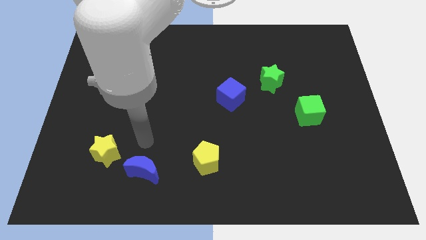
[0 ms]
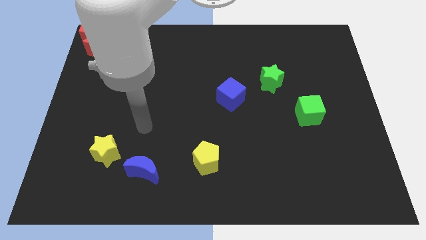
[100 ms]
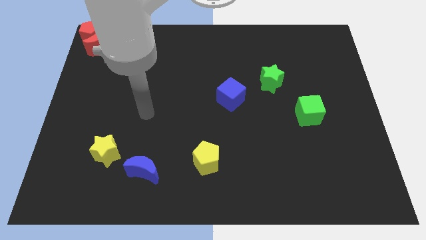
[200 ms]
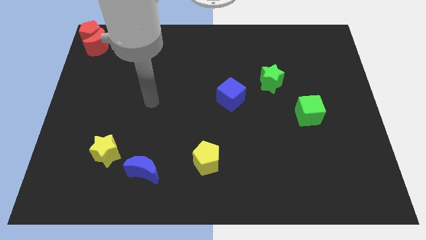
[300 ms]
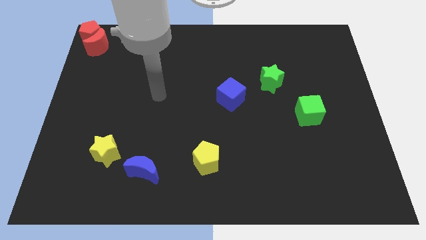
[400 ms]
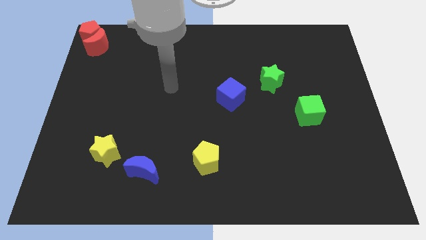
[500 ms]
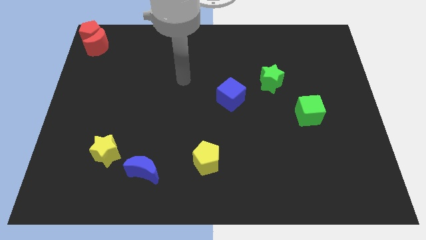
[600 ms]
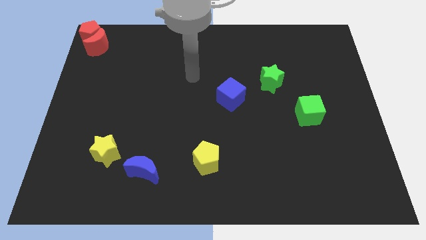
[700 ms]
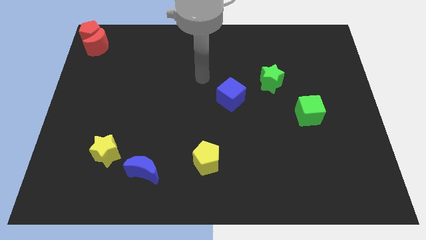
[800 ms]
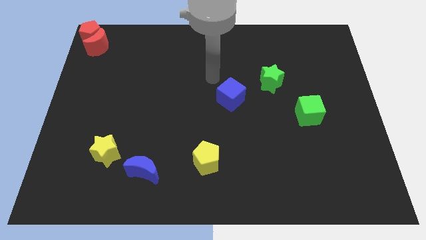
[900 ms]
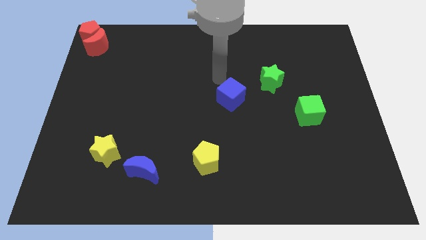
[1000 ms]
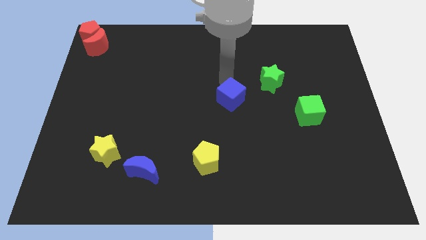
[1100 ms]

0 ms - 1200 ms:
move your arm to the top side of the blue cube

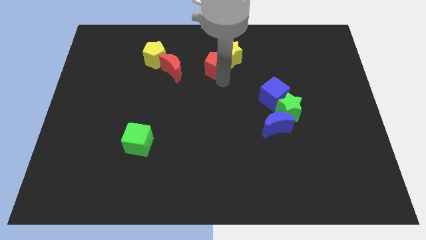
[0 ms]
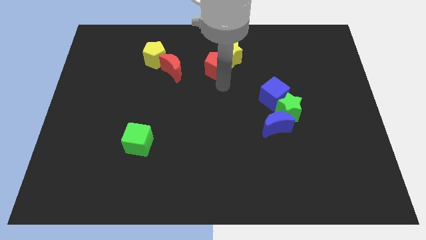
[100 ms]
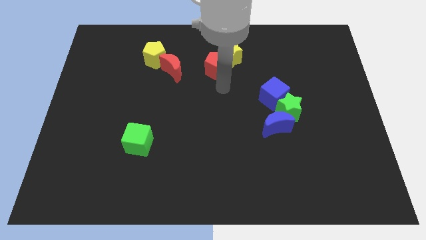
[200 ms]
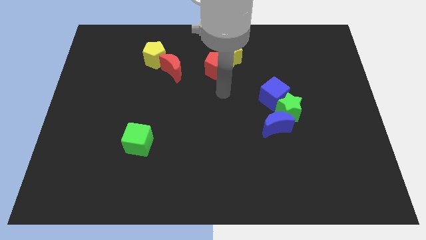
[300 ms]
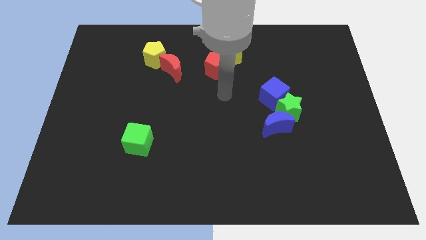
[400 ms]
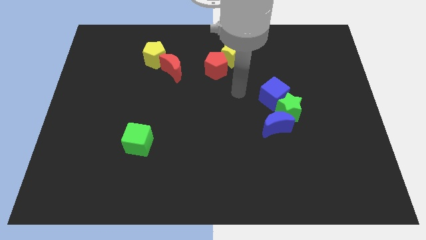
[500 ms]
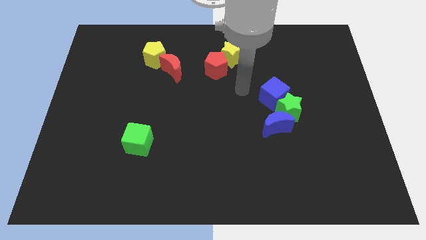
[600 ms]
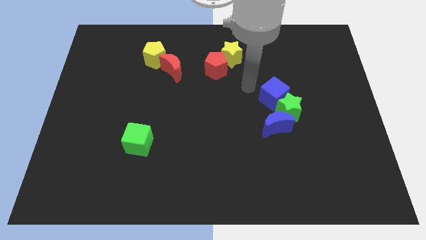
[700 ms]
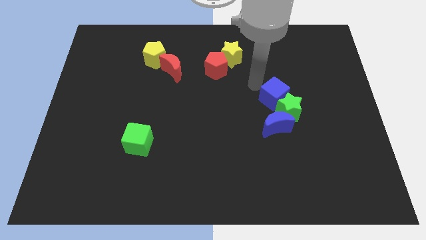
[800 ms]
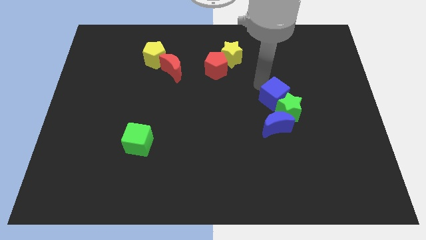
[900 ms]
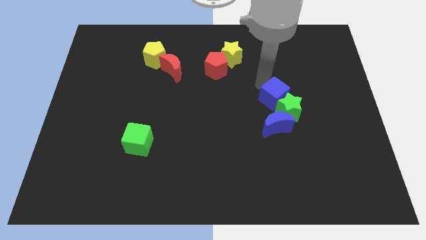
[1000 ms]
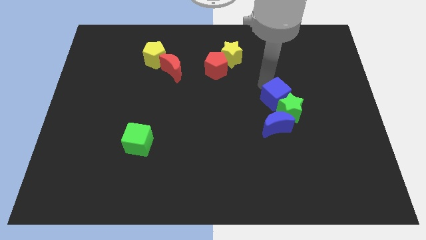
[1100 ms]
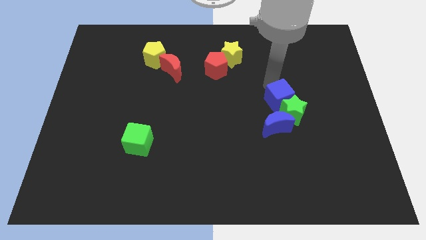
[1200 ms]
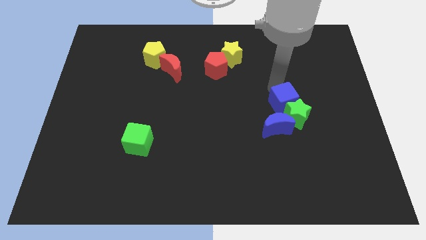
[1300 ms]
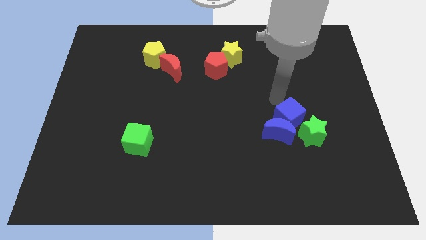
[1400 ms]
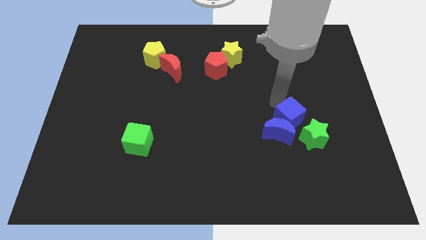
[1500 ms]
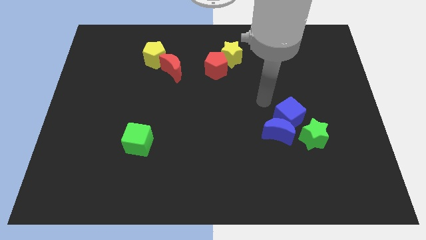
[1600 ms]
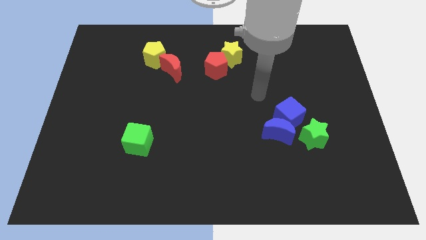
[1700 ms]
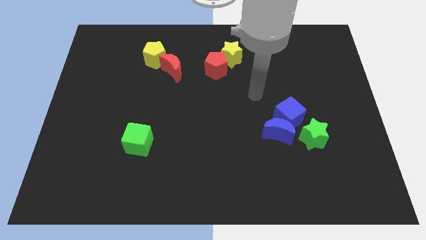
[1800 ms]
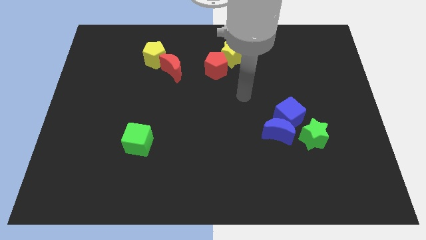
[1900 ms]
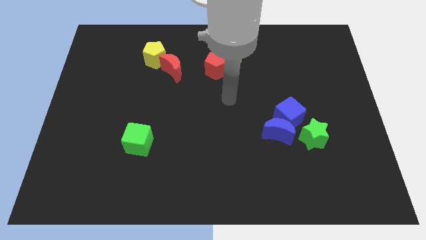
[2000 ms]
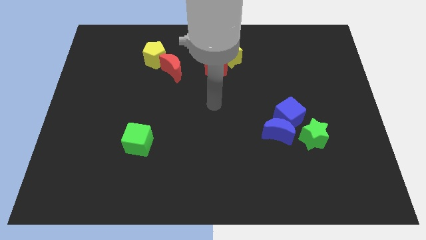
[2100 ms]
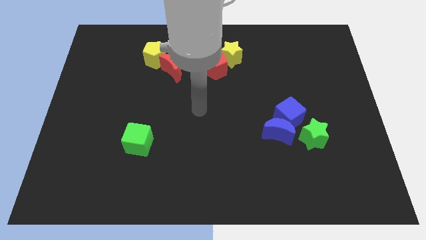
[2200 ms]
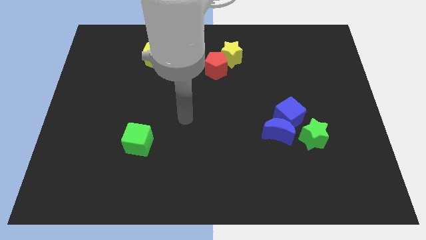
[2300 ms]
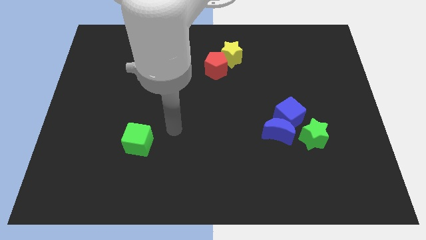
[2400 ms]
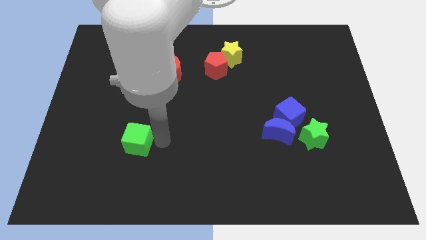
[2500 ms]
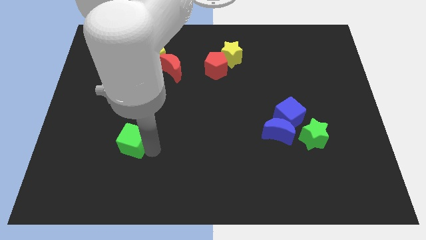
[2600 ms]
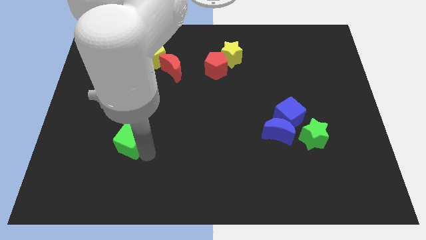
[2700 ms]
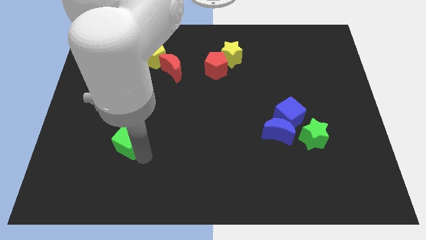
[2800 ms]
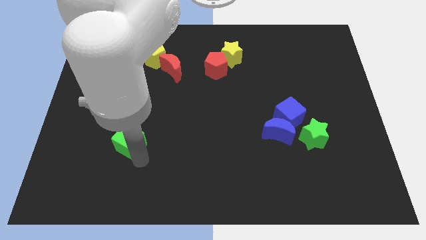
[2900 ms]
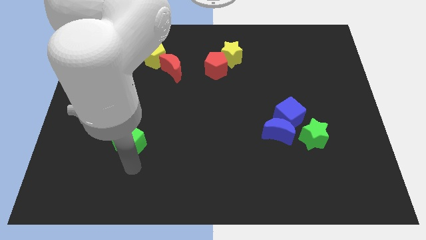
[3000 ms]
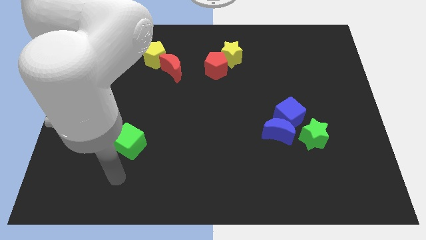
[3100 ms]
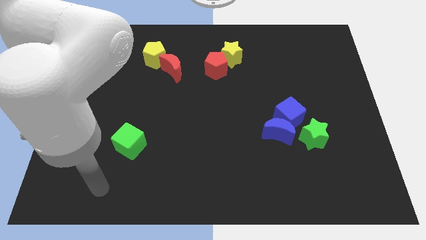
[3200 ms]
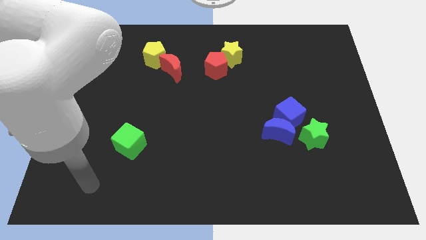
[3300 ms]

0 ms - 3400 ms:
push the green star with the blue cube

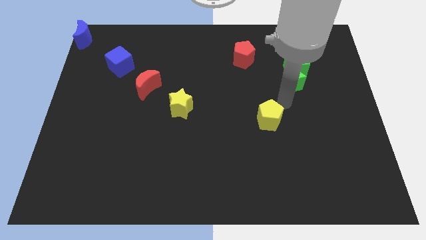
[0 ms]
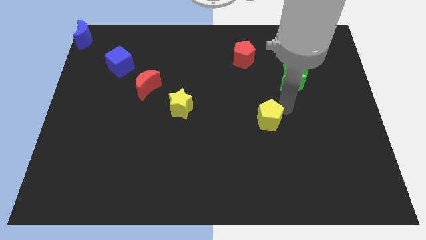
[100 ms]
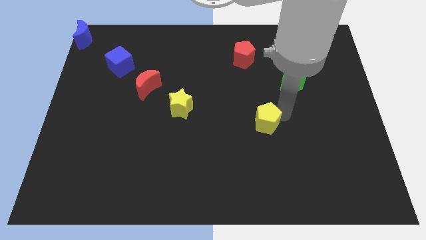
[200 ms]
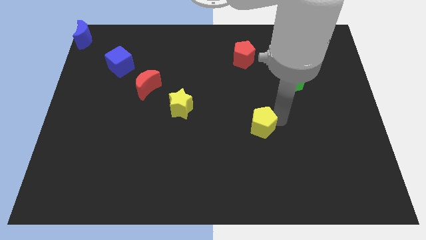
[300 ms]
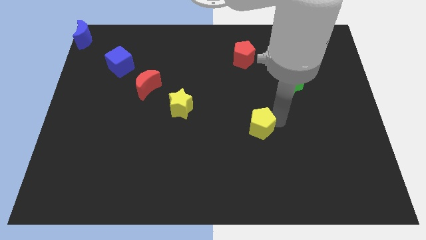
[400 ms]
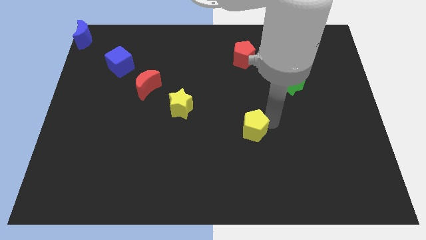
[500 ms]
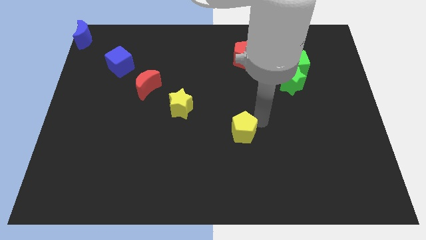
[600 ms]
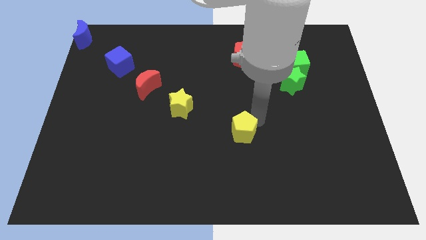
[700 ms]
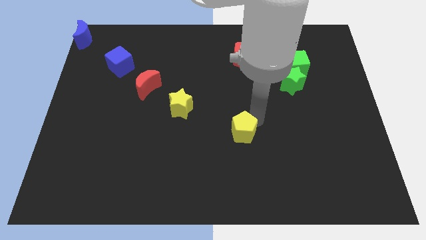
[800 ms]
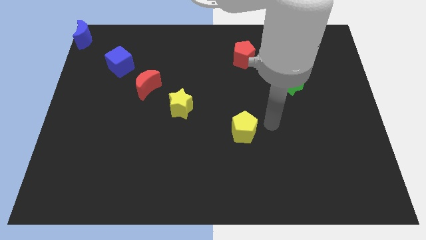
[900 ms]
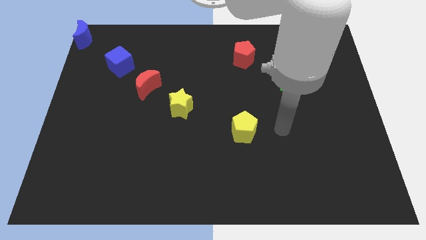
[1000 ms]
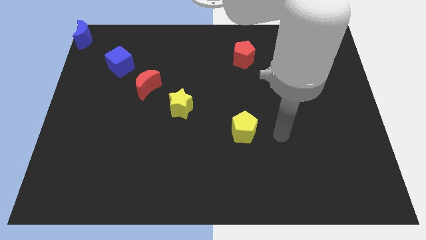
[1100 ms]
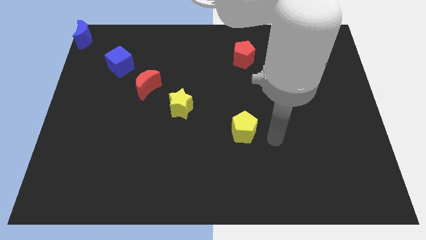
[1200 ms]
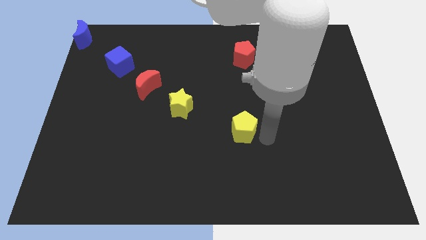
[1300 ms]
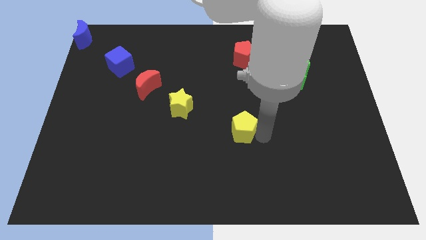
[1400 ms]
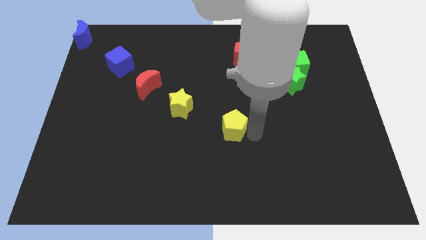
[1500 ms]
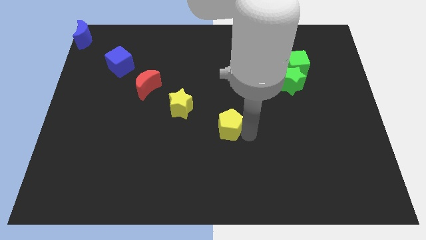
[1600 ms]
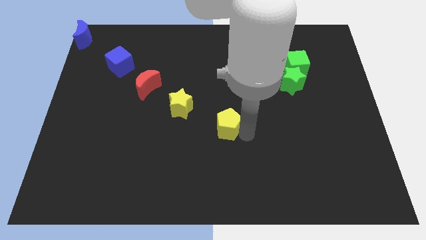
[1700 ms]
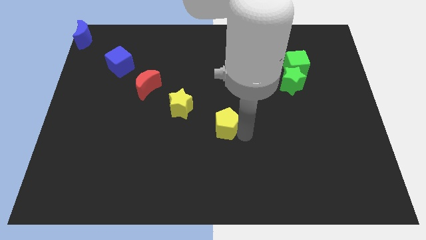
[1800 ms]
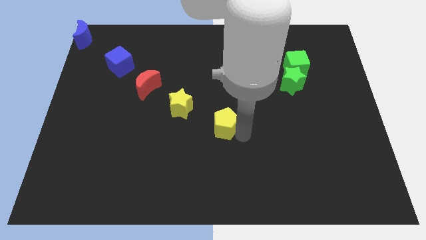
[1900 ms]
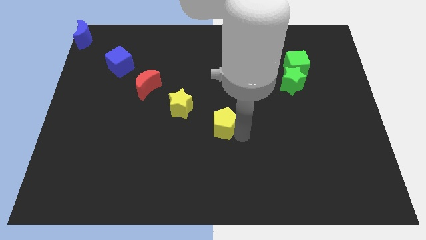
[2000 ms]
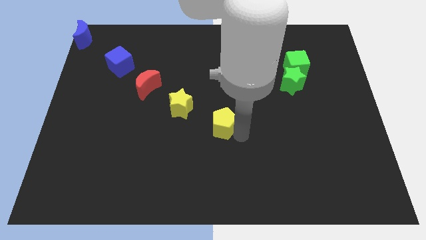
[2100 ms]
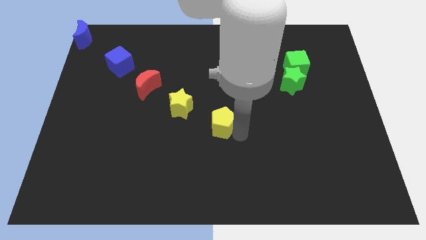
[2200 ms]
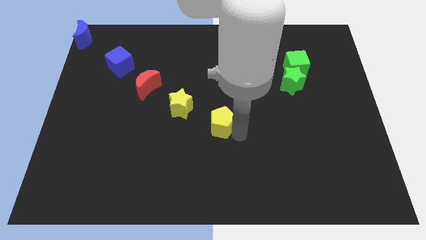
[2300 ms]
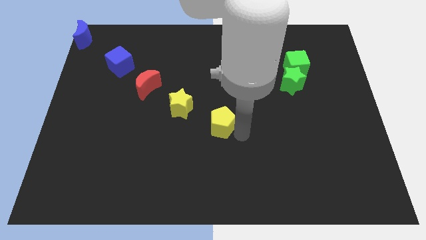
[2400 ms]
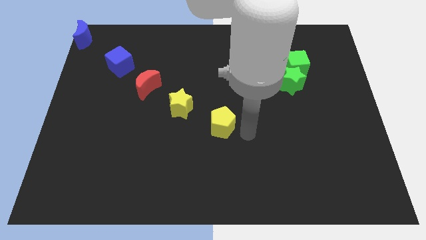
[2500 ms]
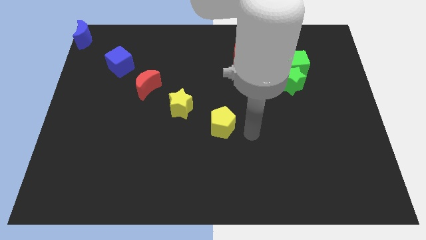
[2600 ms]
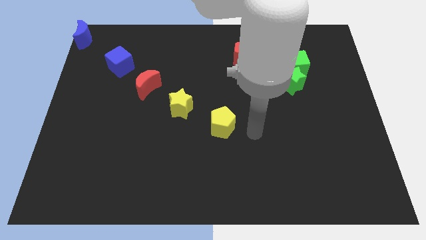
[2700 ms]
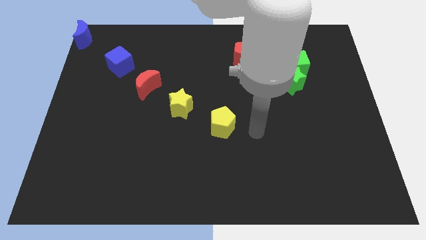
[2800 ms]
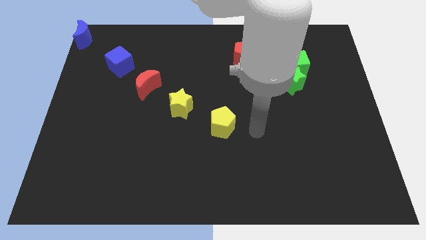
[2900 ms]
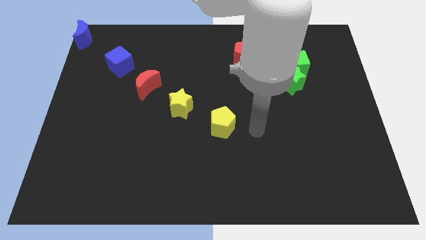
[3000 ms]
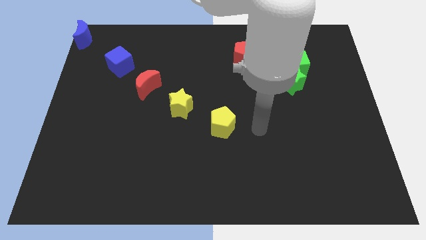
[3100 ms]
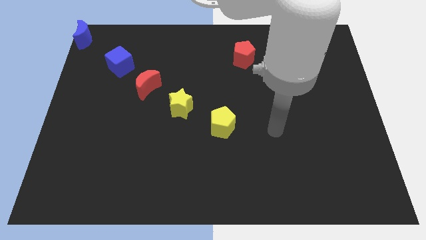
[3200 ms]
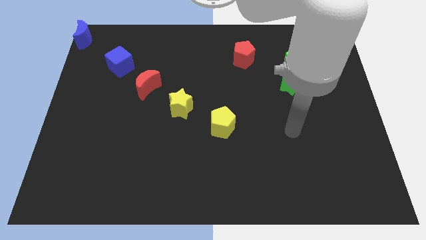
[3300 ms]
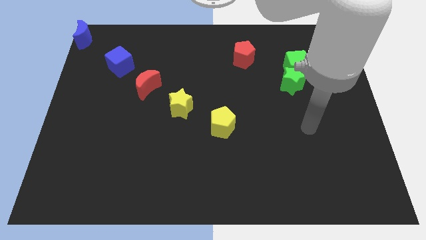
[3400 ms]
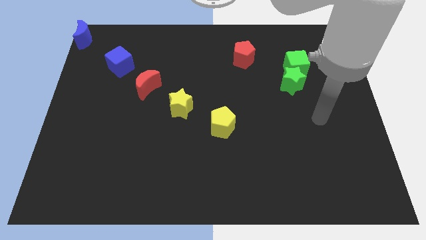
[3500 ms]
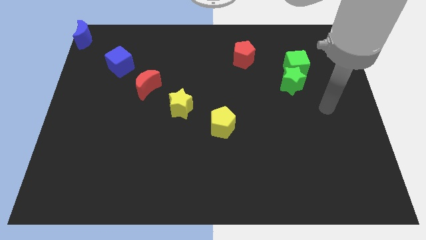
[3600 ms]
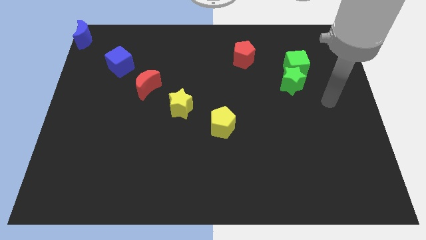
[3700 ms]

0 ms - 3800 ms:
push the yellow pentagon at the center of the board

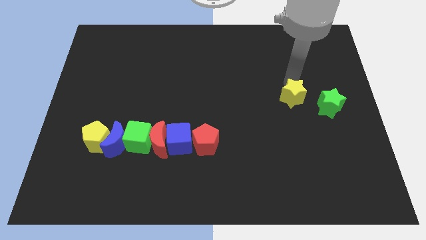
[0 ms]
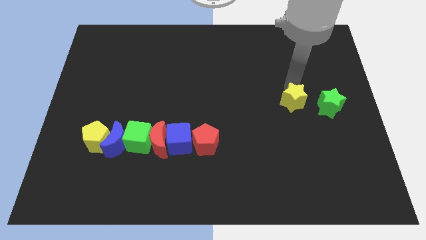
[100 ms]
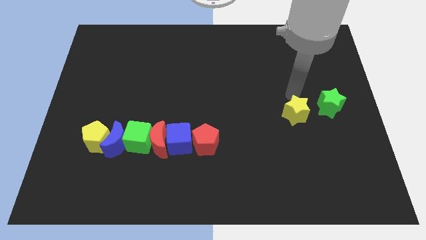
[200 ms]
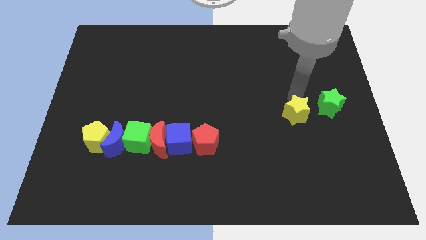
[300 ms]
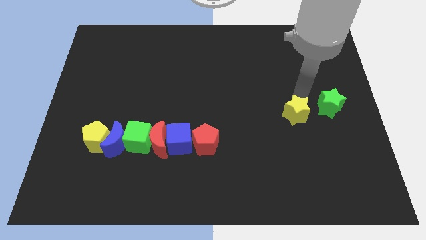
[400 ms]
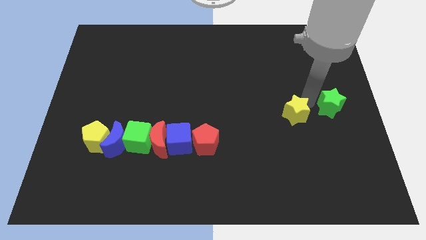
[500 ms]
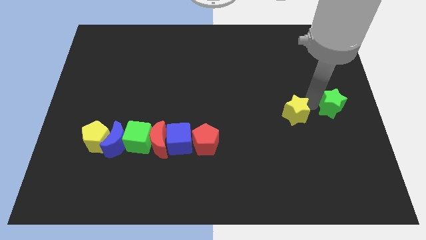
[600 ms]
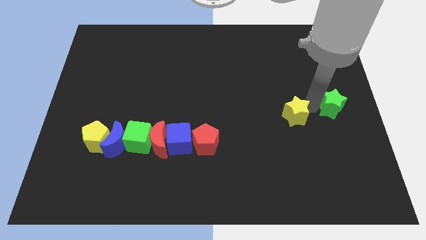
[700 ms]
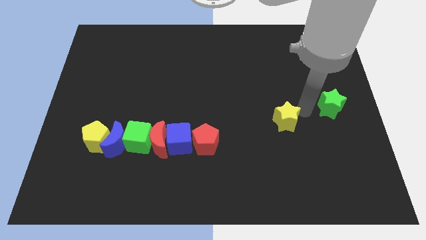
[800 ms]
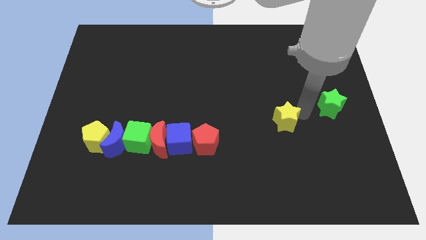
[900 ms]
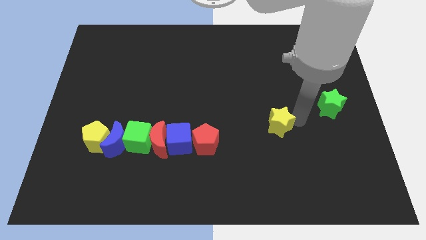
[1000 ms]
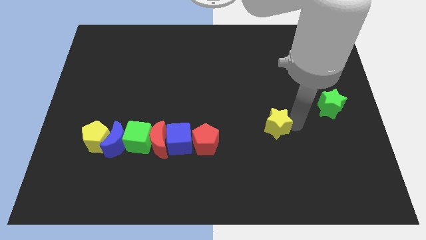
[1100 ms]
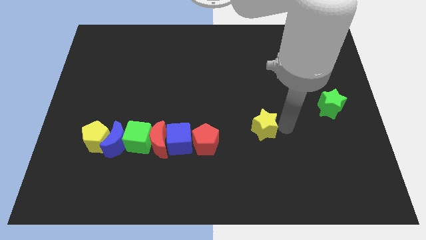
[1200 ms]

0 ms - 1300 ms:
move yellow star slightly down
